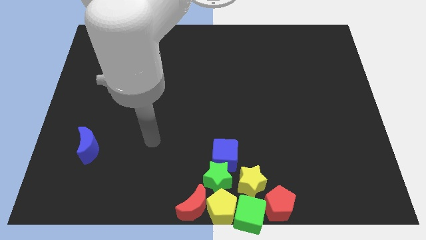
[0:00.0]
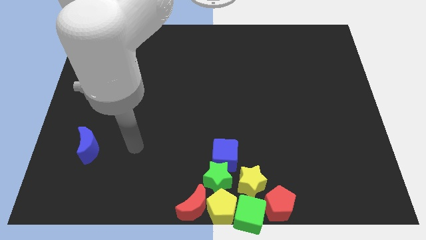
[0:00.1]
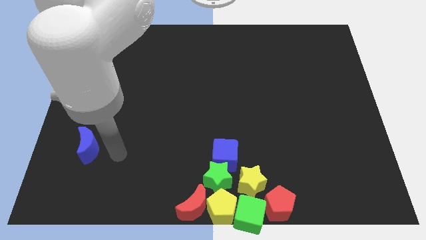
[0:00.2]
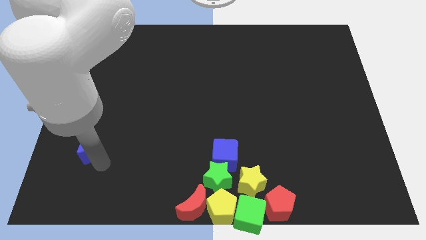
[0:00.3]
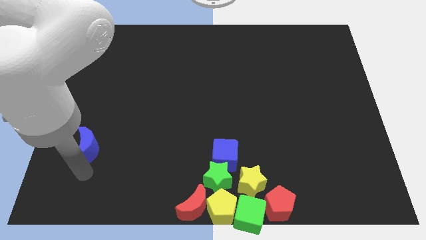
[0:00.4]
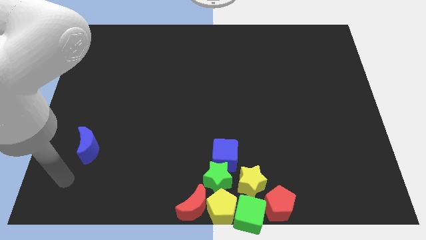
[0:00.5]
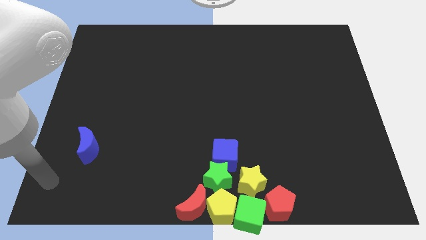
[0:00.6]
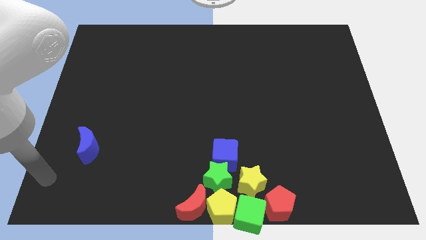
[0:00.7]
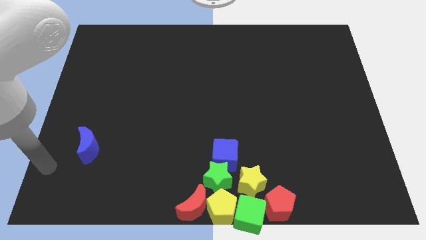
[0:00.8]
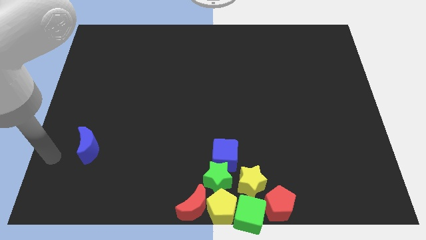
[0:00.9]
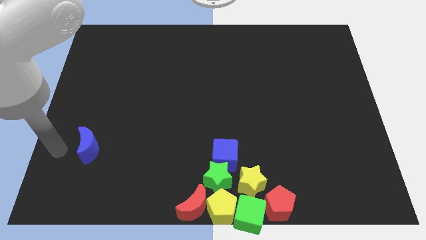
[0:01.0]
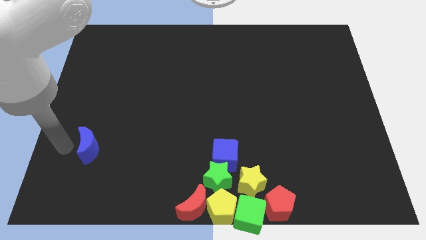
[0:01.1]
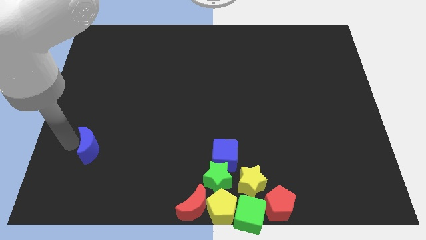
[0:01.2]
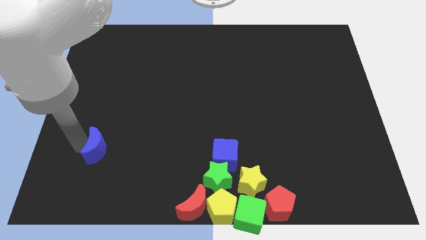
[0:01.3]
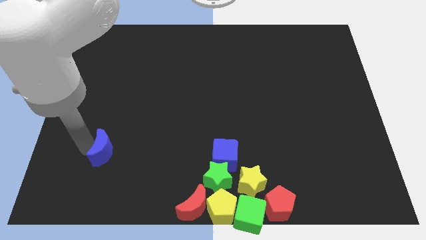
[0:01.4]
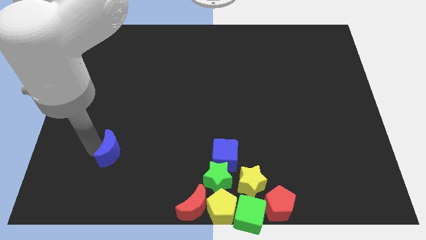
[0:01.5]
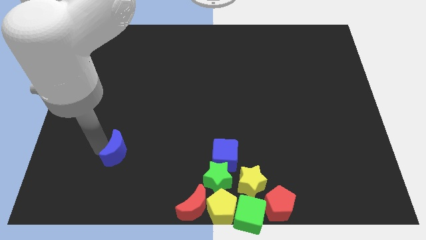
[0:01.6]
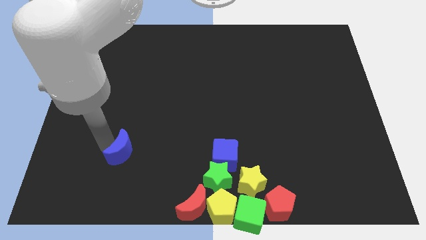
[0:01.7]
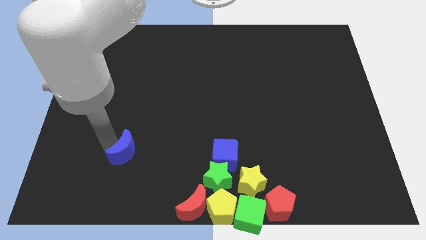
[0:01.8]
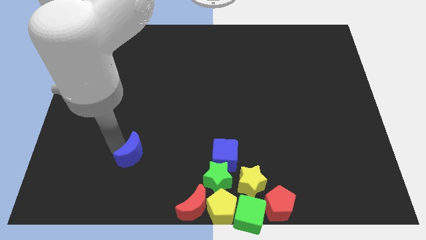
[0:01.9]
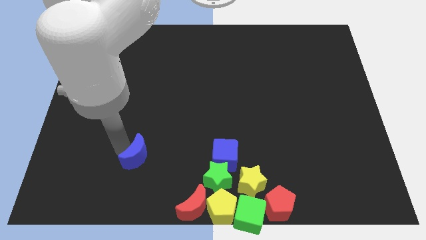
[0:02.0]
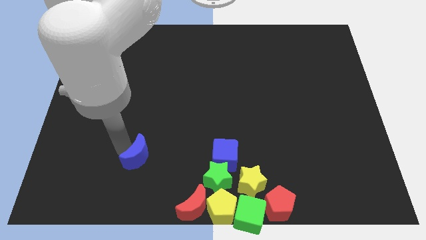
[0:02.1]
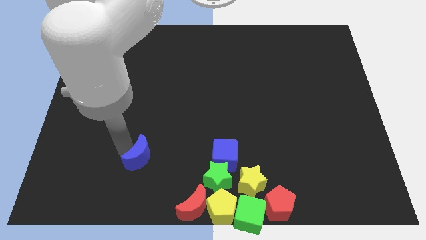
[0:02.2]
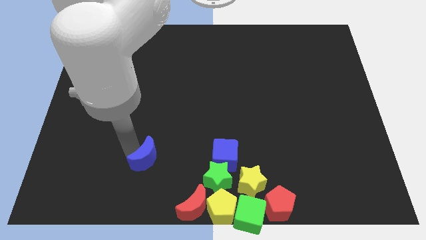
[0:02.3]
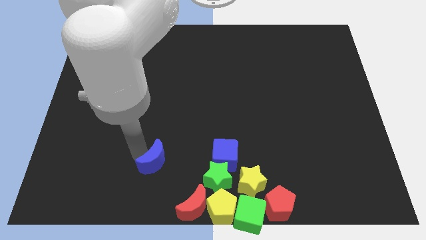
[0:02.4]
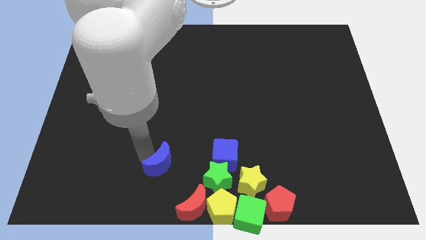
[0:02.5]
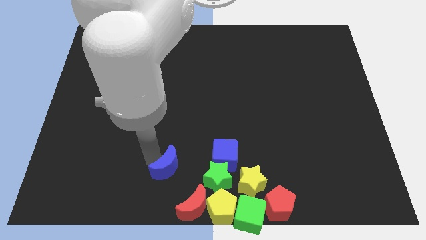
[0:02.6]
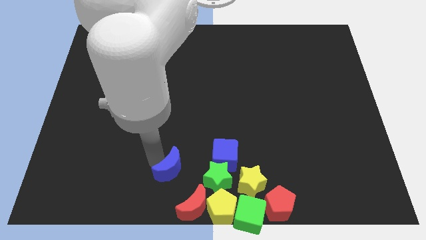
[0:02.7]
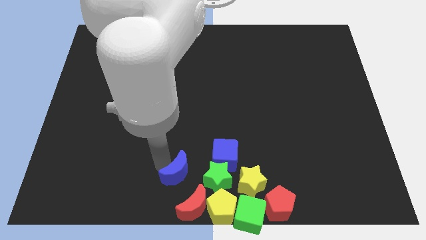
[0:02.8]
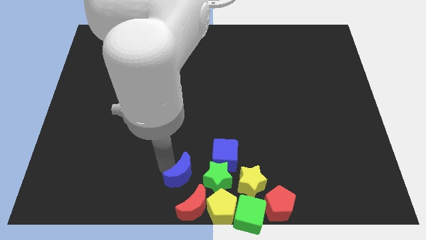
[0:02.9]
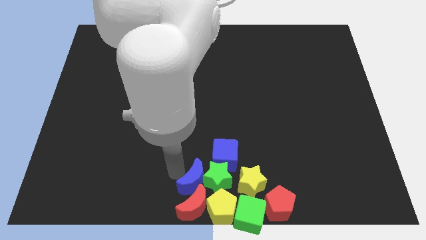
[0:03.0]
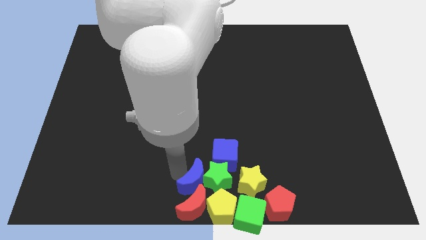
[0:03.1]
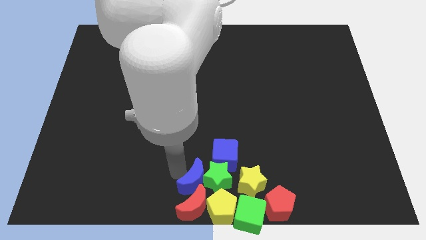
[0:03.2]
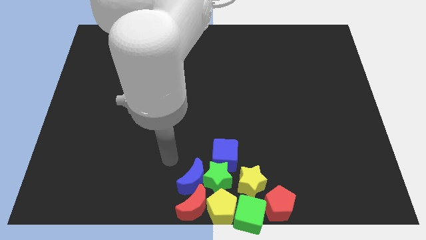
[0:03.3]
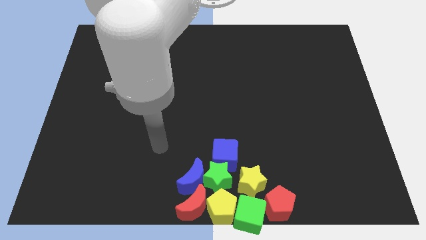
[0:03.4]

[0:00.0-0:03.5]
move blue moon in to group of block

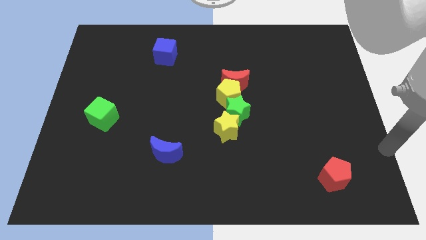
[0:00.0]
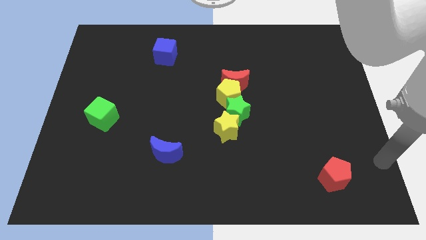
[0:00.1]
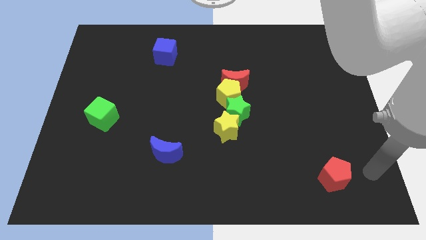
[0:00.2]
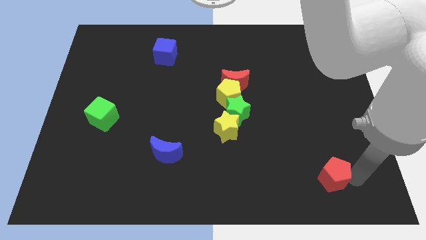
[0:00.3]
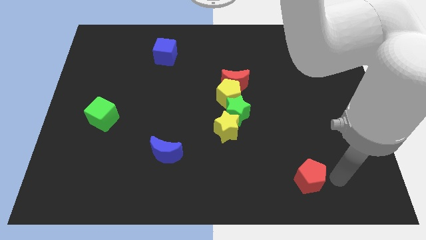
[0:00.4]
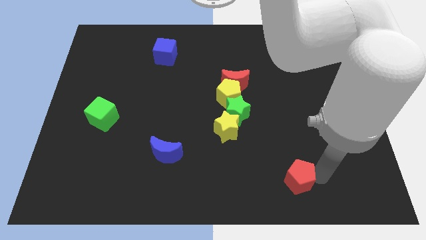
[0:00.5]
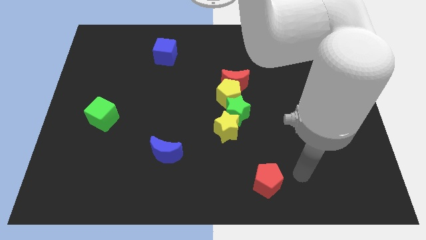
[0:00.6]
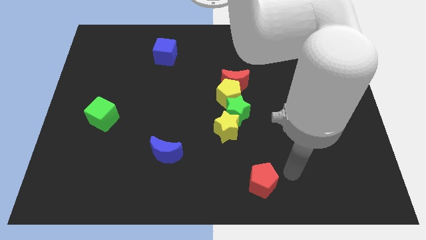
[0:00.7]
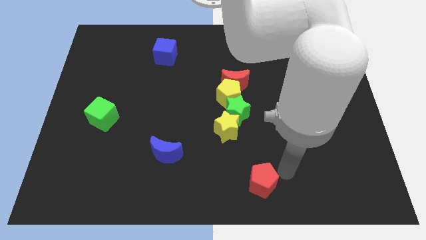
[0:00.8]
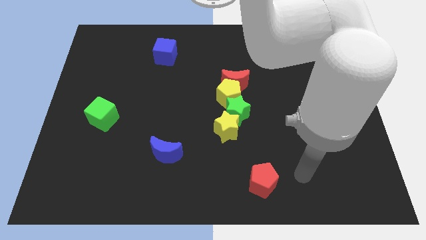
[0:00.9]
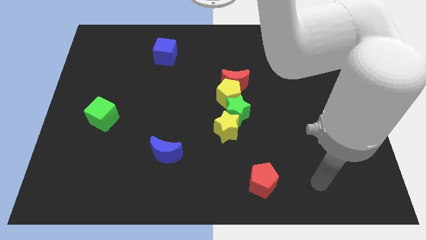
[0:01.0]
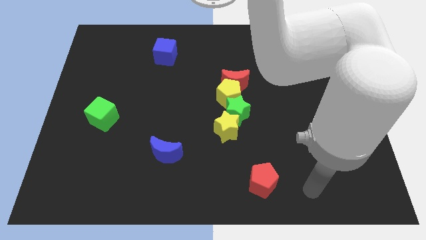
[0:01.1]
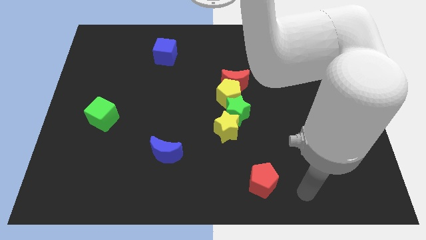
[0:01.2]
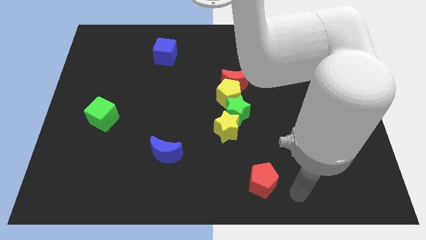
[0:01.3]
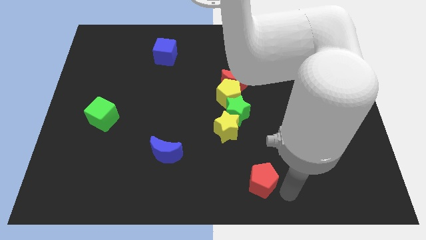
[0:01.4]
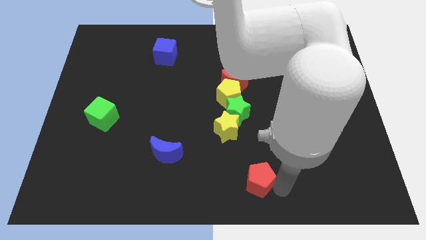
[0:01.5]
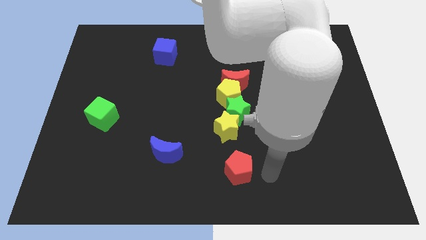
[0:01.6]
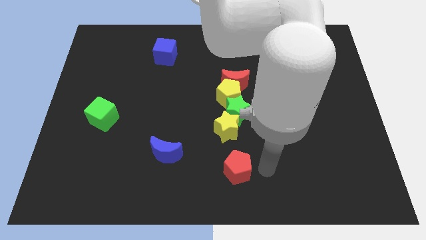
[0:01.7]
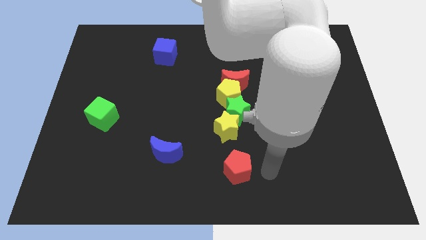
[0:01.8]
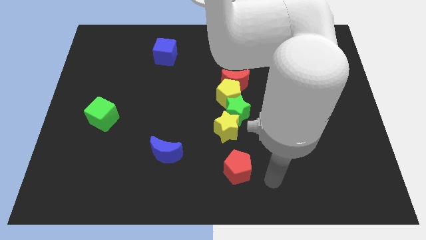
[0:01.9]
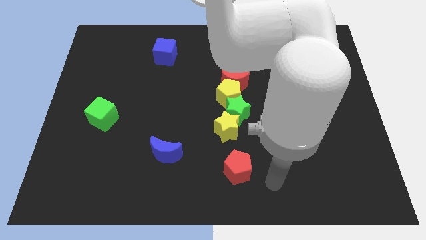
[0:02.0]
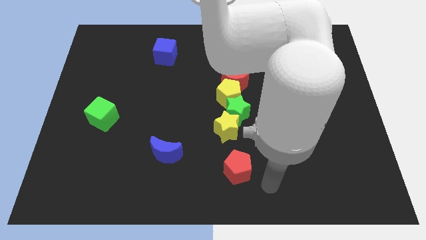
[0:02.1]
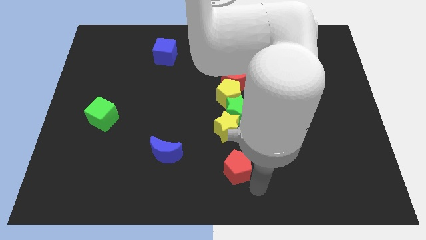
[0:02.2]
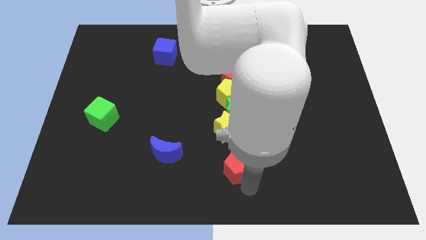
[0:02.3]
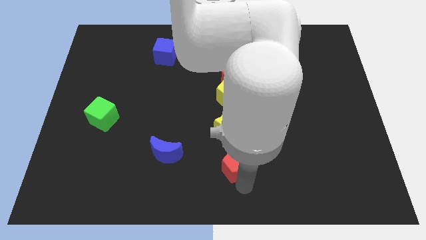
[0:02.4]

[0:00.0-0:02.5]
place the red pentagon below the yellow star

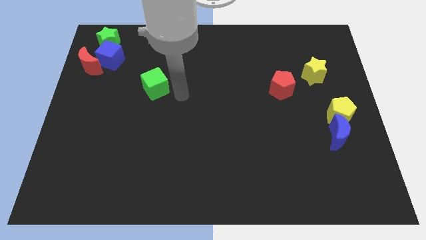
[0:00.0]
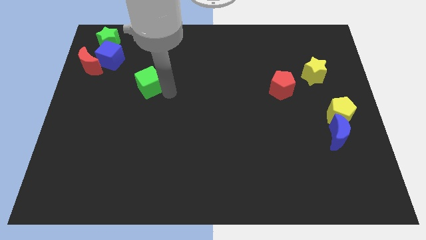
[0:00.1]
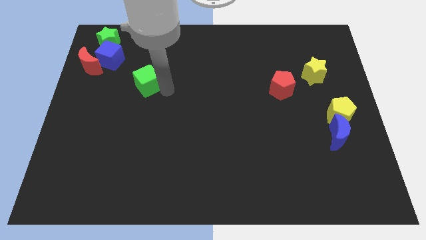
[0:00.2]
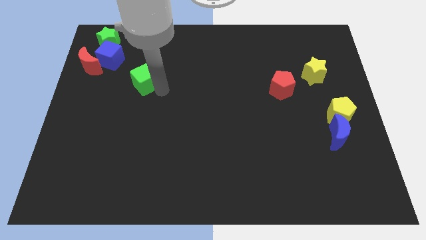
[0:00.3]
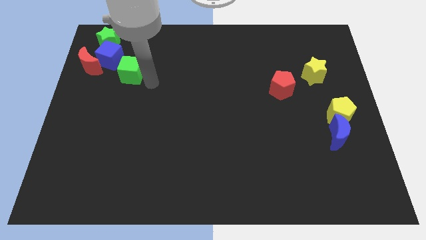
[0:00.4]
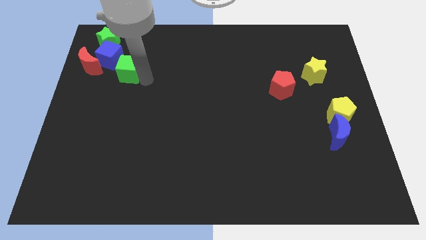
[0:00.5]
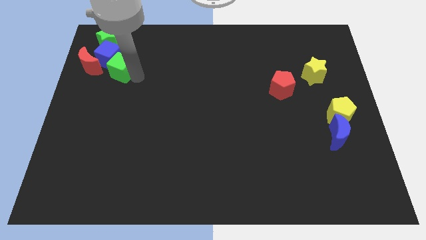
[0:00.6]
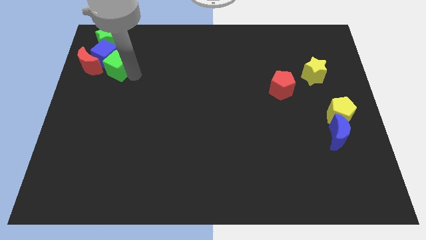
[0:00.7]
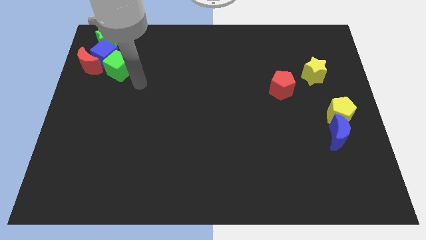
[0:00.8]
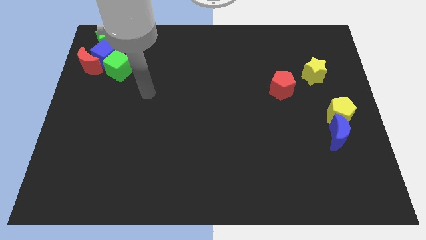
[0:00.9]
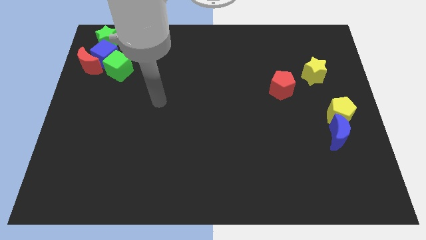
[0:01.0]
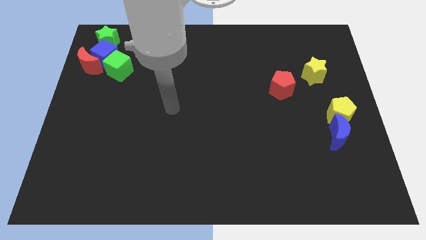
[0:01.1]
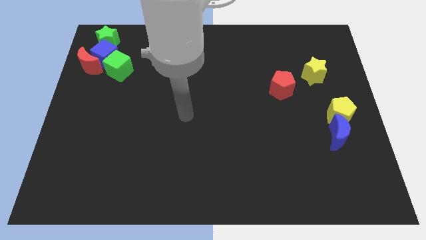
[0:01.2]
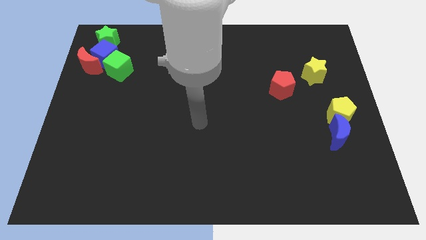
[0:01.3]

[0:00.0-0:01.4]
push the green cube close to the blue cube on the board

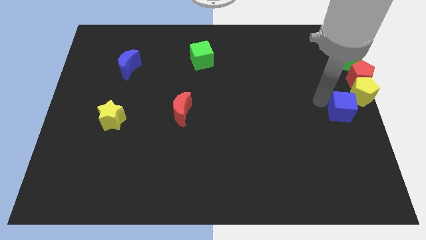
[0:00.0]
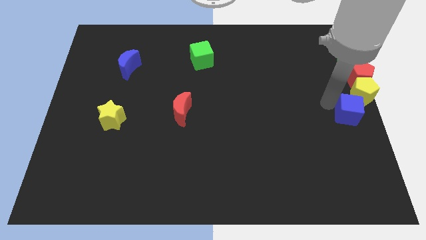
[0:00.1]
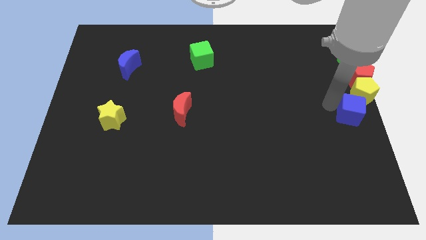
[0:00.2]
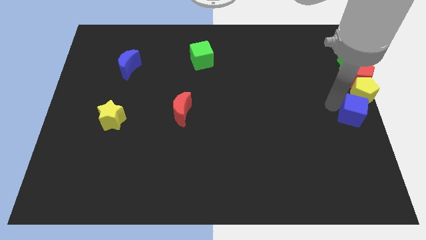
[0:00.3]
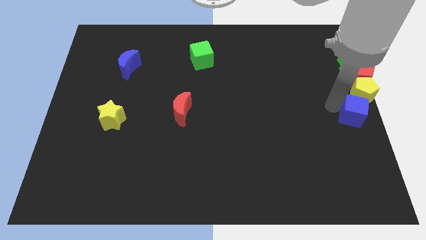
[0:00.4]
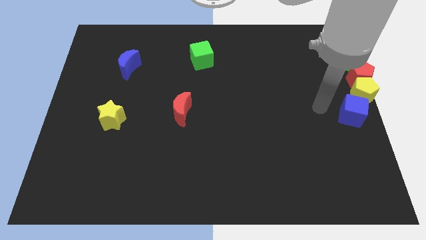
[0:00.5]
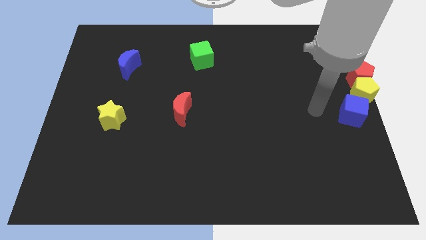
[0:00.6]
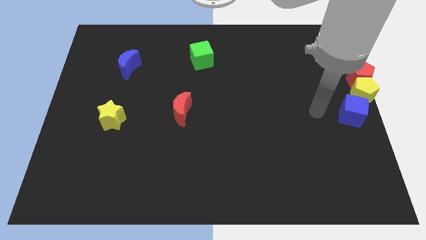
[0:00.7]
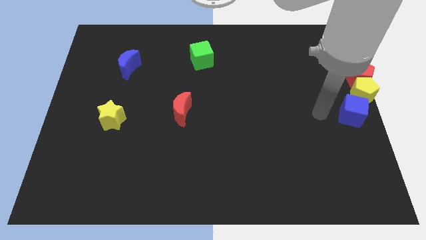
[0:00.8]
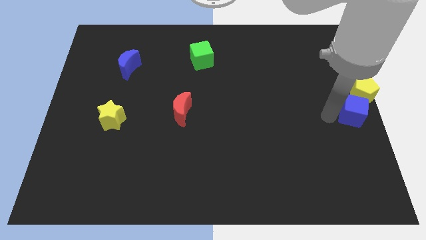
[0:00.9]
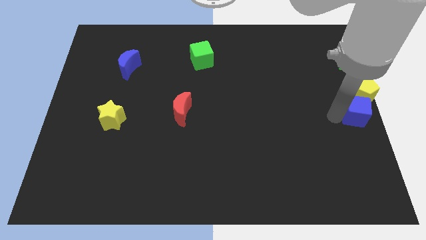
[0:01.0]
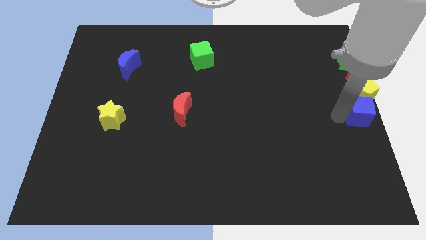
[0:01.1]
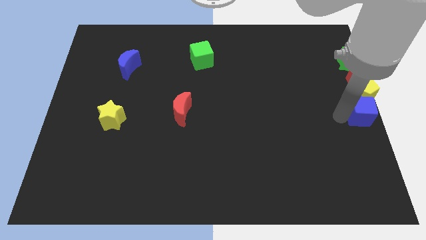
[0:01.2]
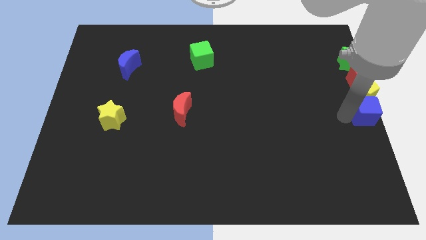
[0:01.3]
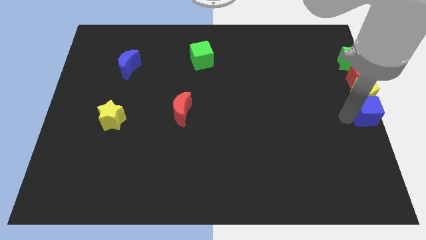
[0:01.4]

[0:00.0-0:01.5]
move the blue cube below the yellow pentagon
